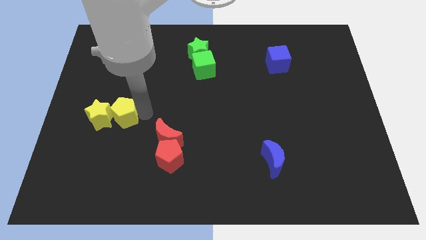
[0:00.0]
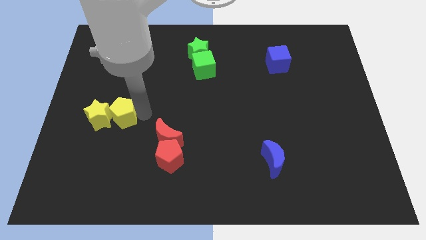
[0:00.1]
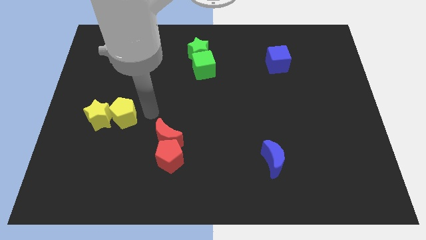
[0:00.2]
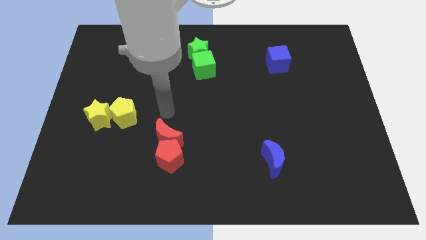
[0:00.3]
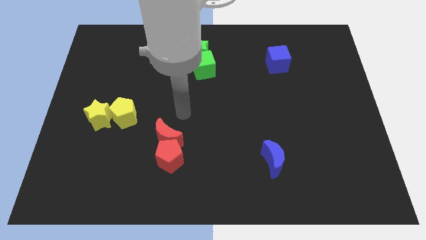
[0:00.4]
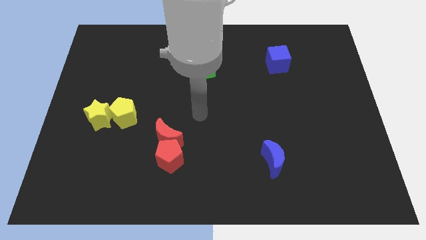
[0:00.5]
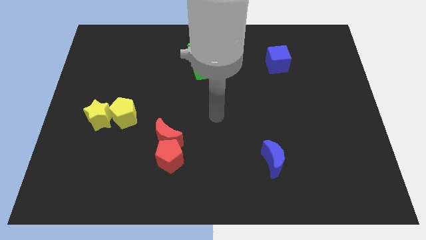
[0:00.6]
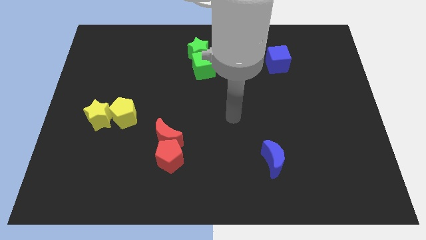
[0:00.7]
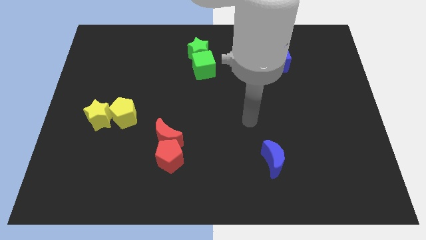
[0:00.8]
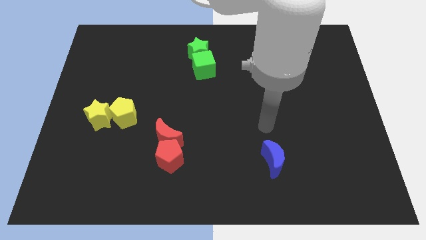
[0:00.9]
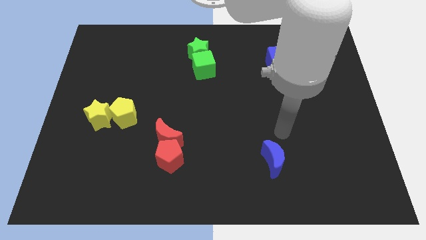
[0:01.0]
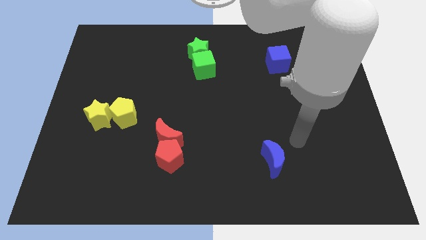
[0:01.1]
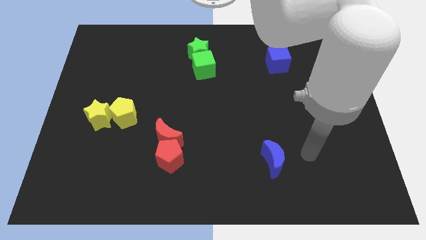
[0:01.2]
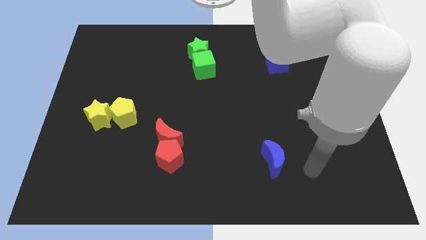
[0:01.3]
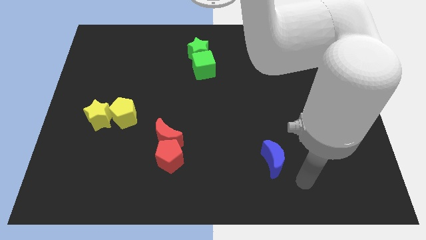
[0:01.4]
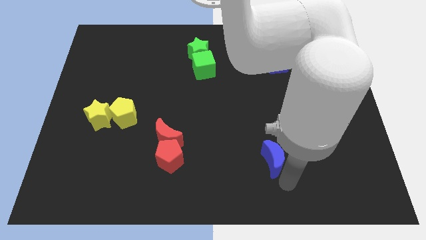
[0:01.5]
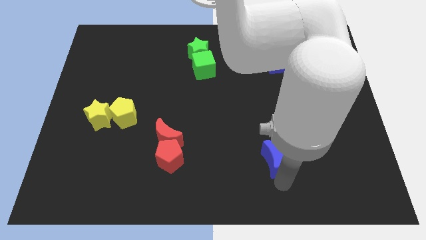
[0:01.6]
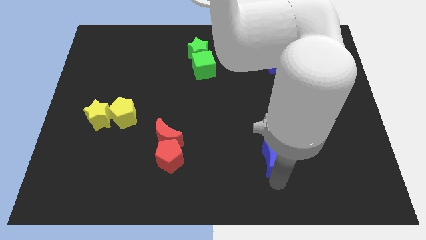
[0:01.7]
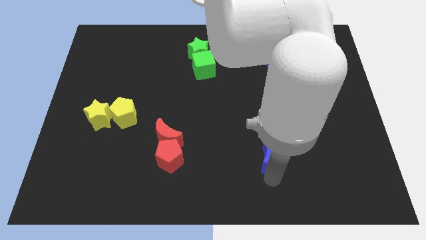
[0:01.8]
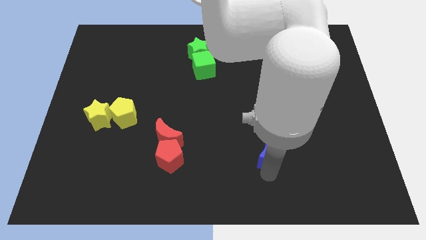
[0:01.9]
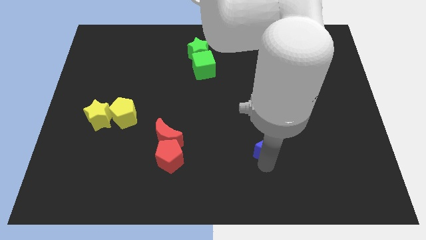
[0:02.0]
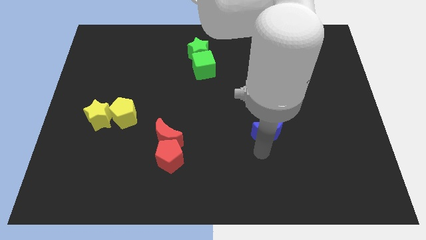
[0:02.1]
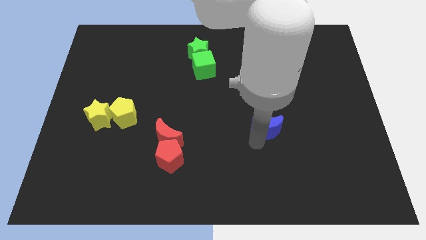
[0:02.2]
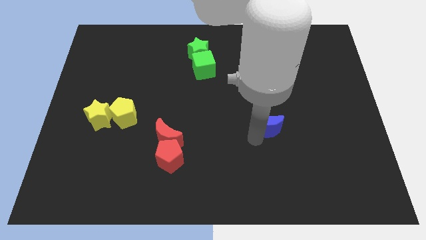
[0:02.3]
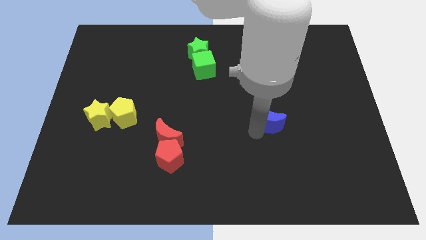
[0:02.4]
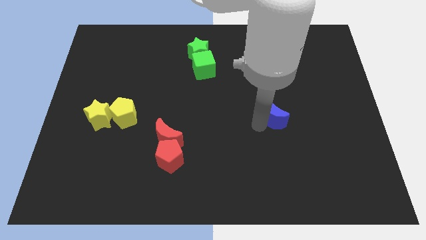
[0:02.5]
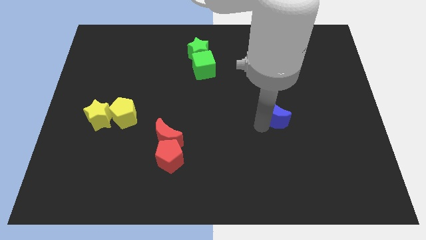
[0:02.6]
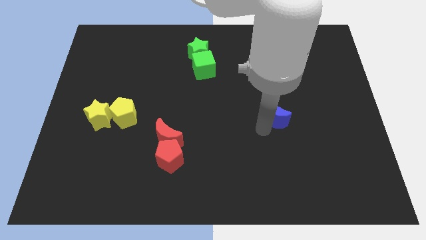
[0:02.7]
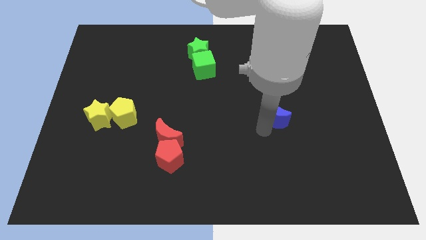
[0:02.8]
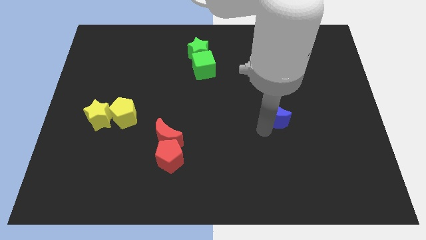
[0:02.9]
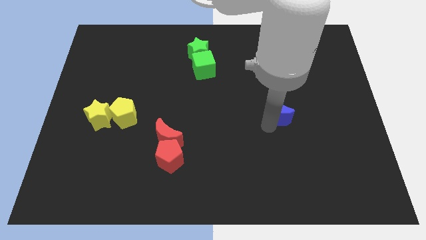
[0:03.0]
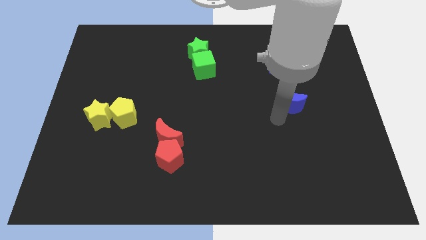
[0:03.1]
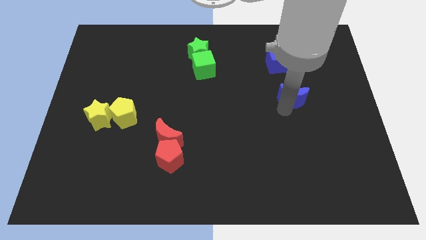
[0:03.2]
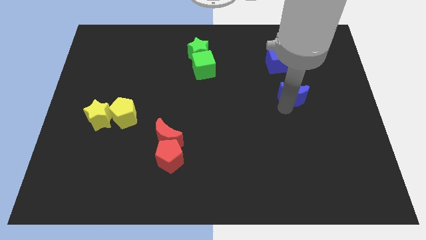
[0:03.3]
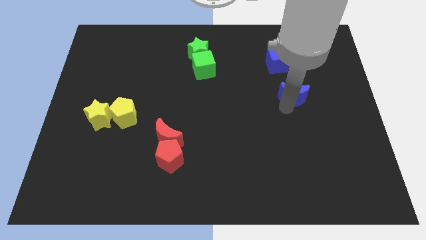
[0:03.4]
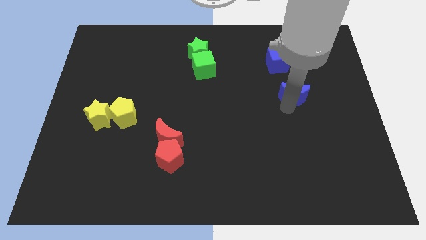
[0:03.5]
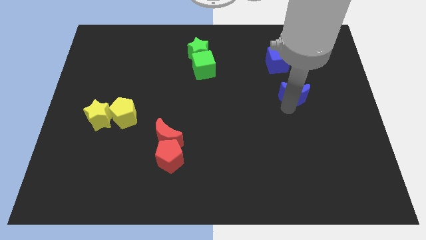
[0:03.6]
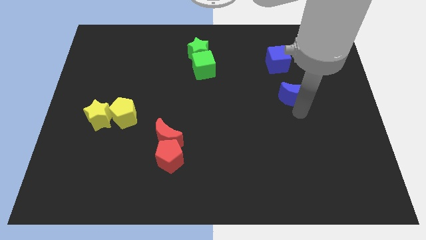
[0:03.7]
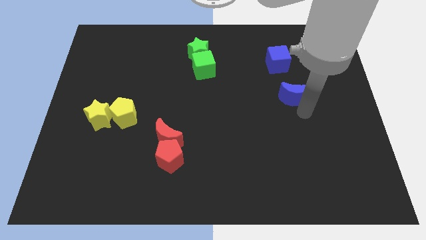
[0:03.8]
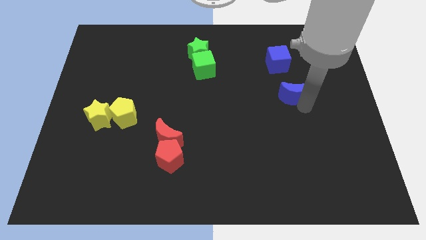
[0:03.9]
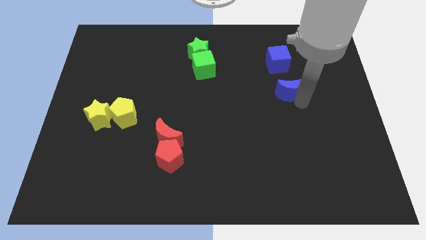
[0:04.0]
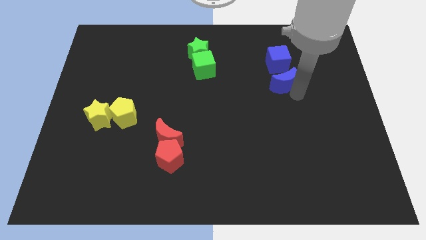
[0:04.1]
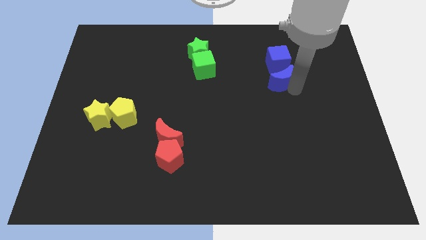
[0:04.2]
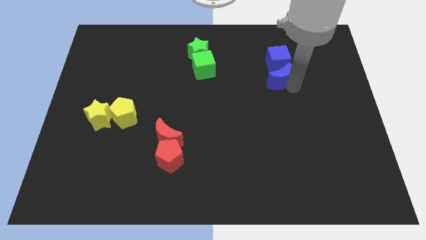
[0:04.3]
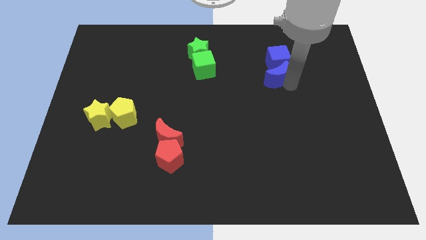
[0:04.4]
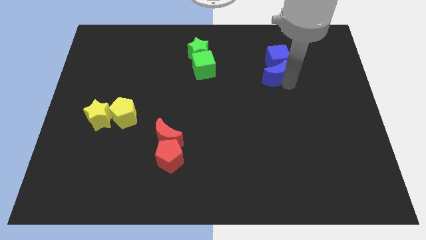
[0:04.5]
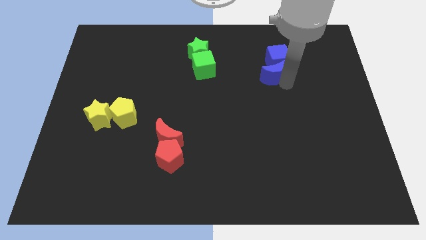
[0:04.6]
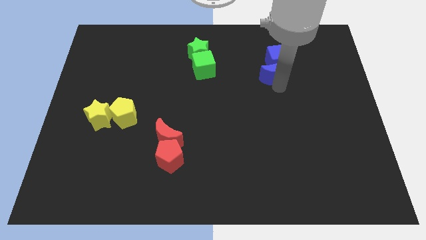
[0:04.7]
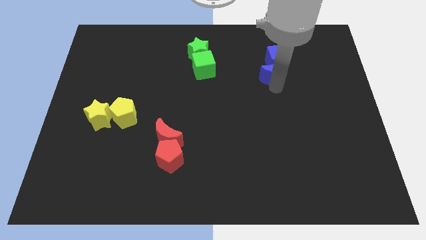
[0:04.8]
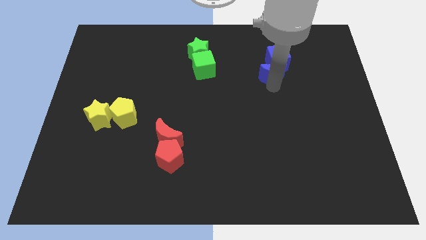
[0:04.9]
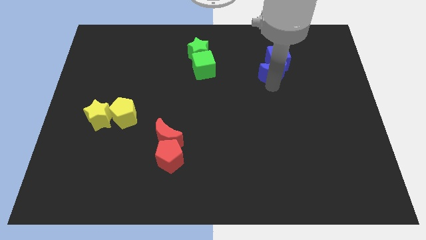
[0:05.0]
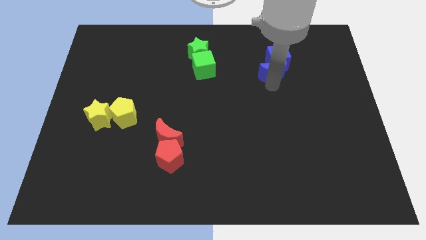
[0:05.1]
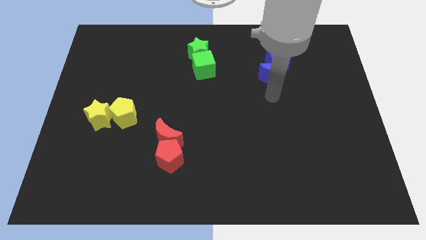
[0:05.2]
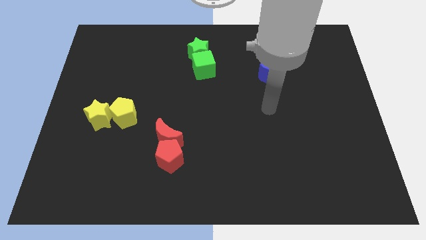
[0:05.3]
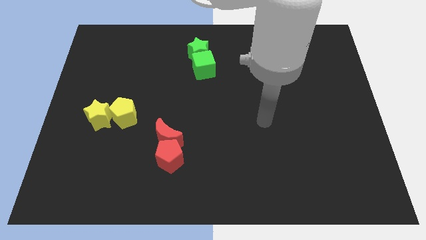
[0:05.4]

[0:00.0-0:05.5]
place the blue crescent close to the blue cube

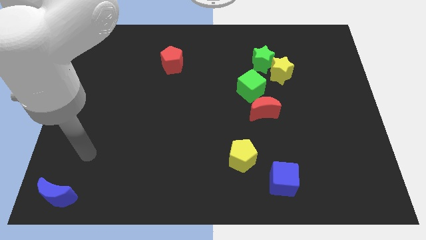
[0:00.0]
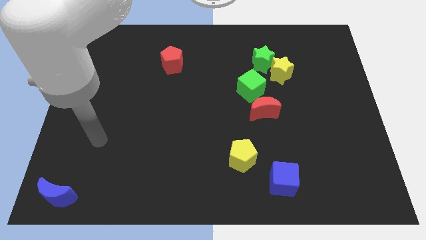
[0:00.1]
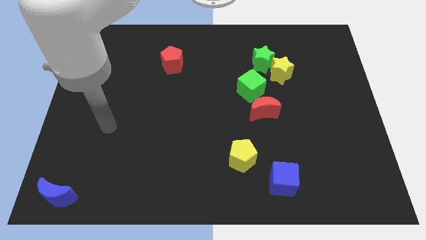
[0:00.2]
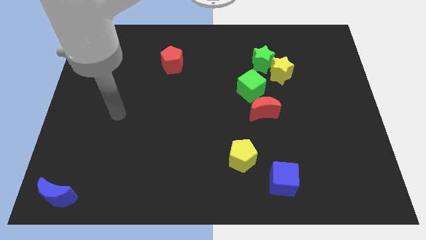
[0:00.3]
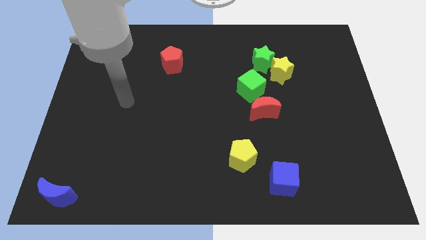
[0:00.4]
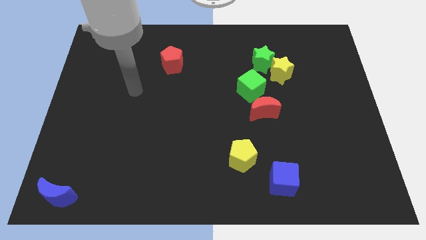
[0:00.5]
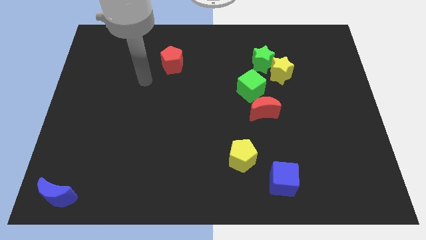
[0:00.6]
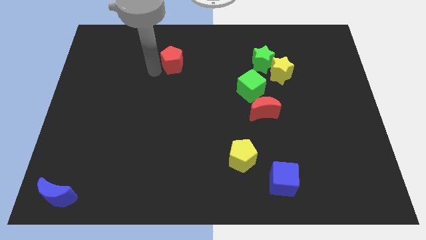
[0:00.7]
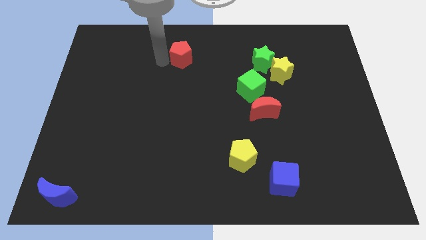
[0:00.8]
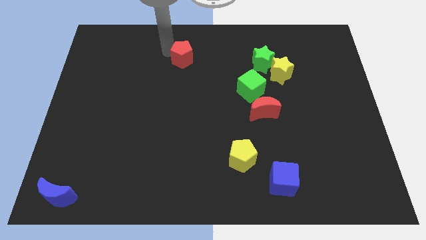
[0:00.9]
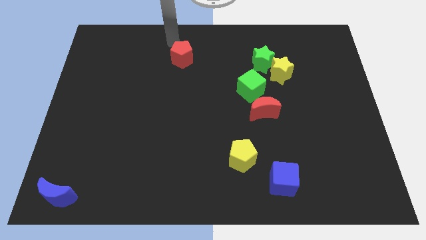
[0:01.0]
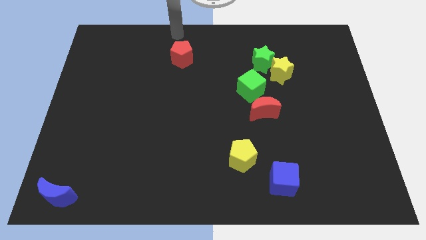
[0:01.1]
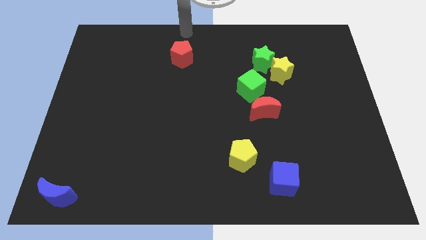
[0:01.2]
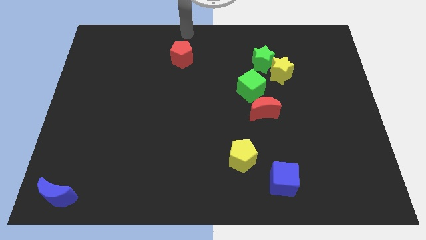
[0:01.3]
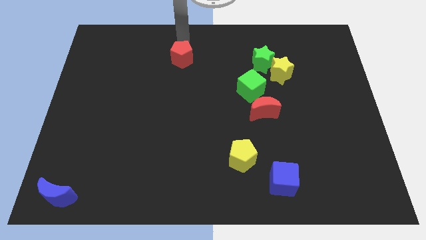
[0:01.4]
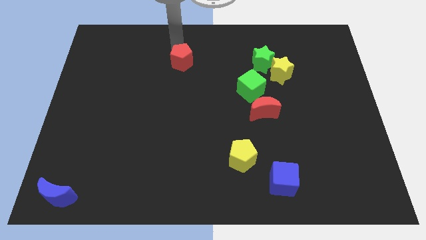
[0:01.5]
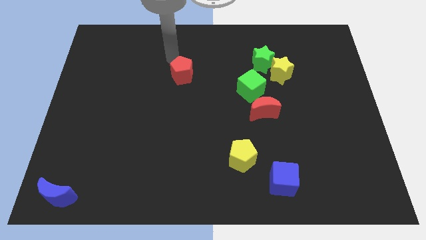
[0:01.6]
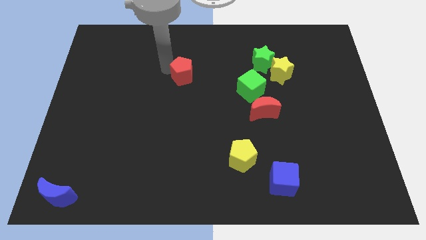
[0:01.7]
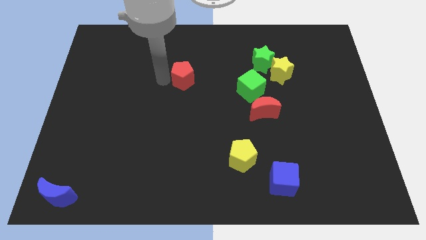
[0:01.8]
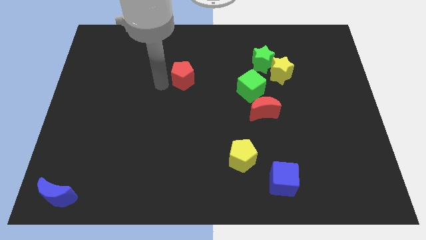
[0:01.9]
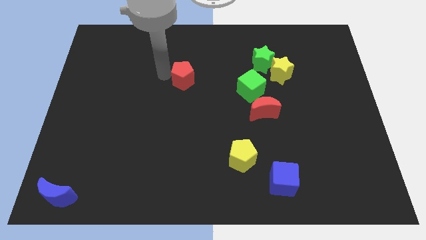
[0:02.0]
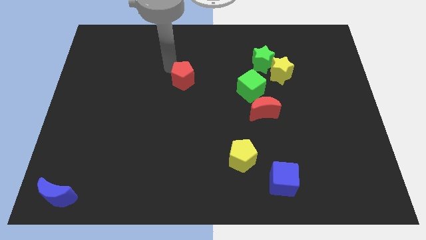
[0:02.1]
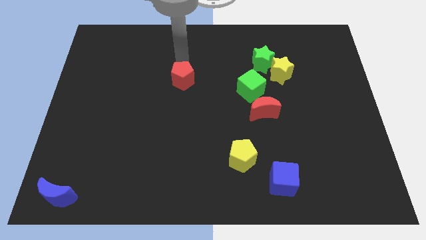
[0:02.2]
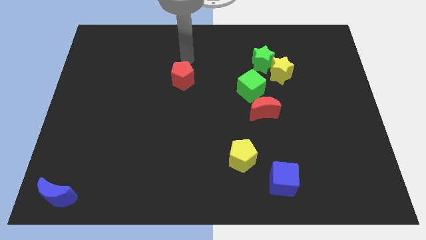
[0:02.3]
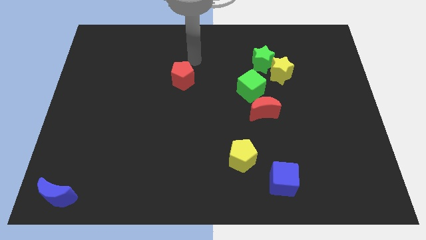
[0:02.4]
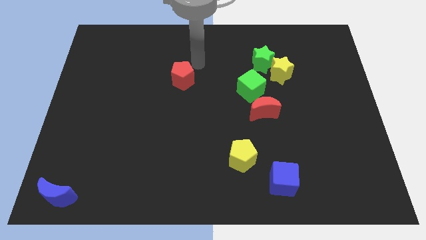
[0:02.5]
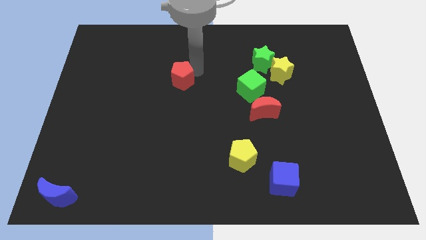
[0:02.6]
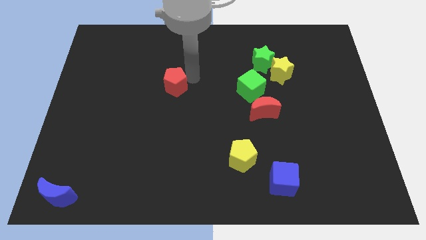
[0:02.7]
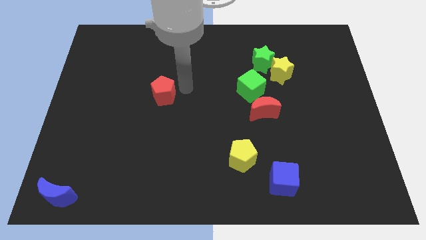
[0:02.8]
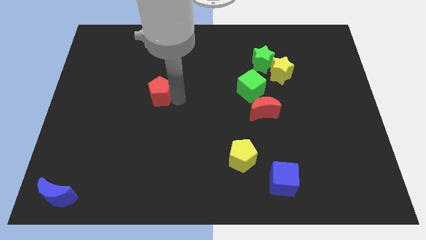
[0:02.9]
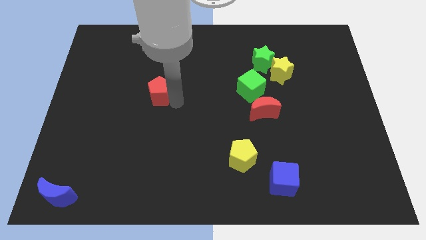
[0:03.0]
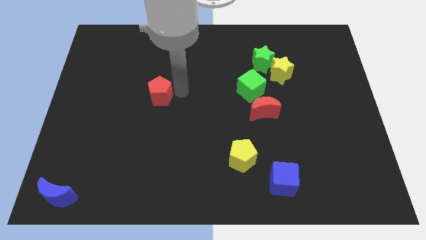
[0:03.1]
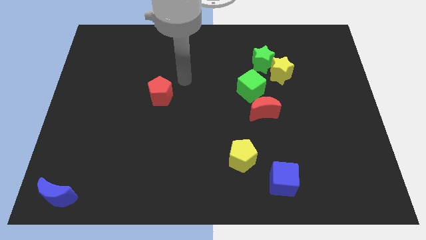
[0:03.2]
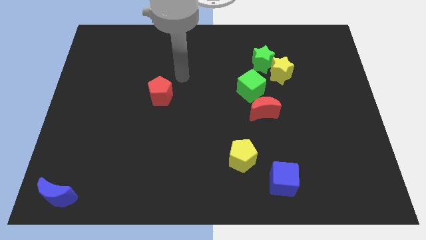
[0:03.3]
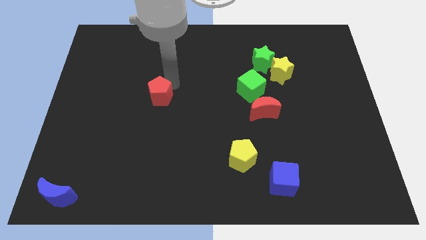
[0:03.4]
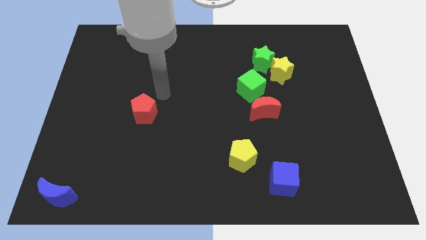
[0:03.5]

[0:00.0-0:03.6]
push red pentagon towards the center of the board

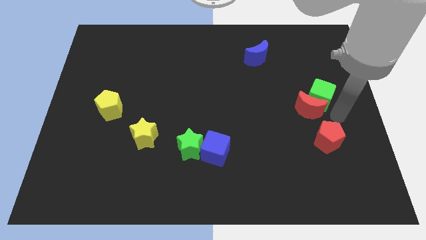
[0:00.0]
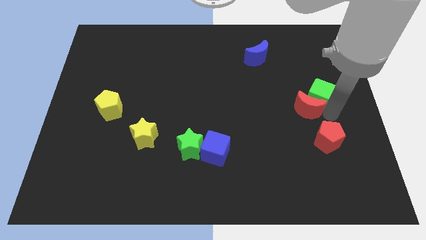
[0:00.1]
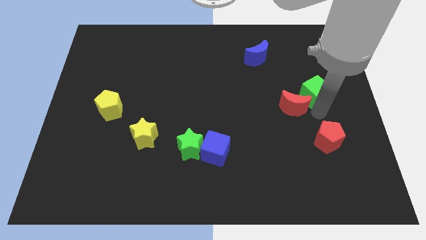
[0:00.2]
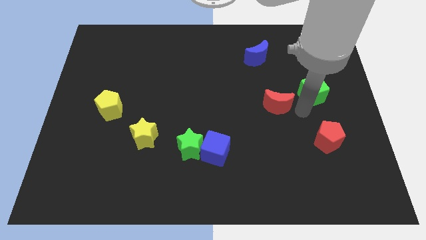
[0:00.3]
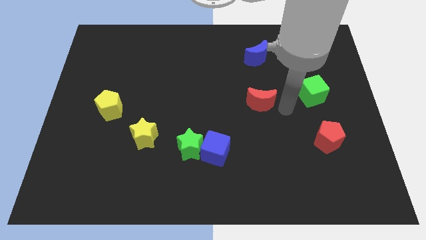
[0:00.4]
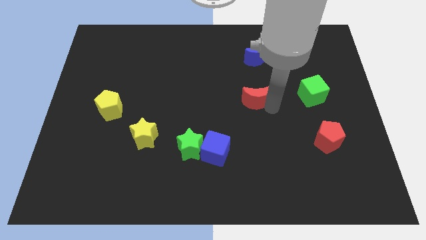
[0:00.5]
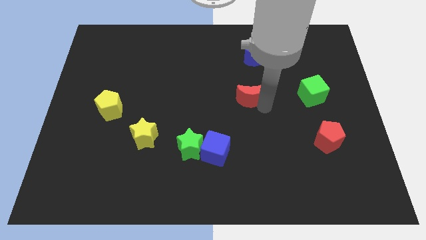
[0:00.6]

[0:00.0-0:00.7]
place the red moon down to the blue moon
